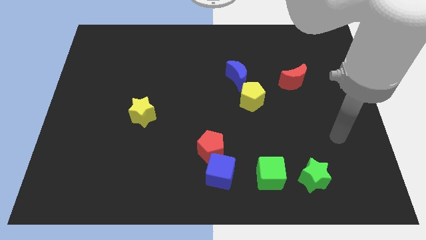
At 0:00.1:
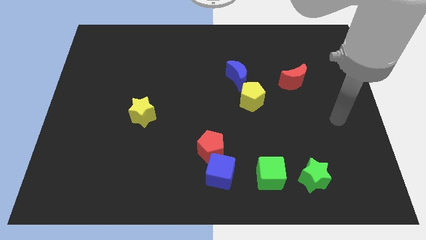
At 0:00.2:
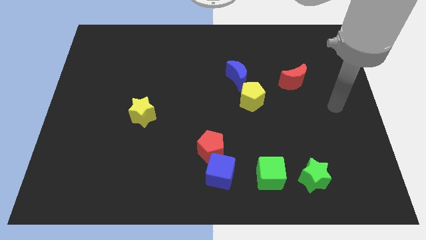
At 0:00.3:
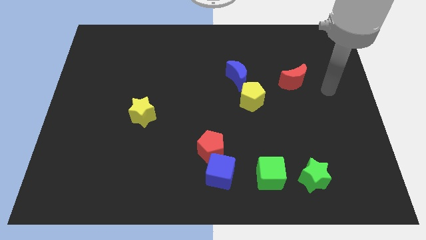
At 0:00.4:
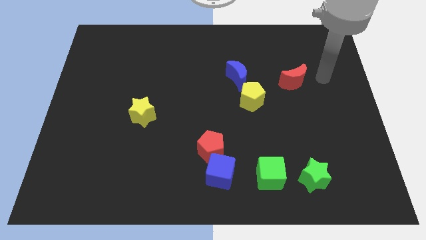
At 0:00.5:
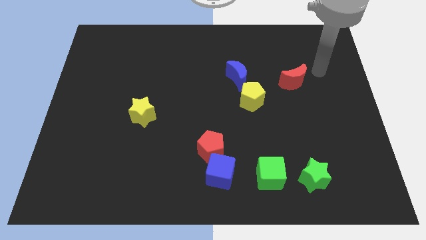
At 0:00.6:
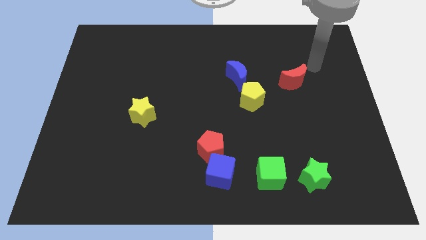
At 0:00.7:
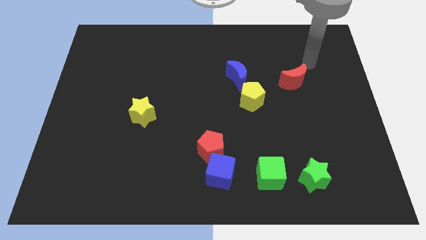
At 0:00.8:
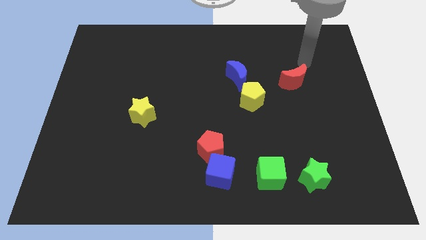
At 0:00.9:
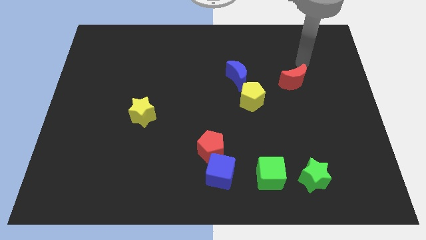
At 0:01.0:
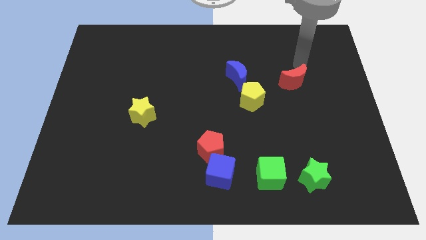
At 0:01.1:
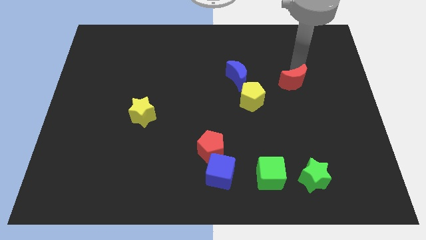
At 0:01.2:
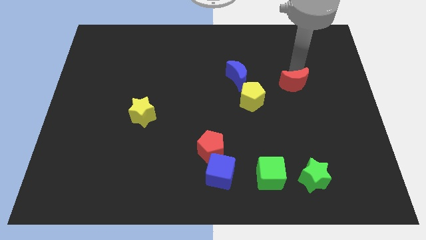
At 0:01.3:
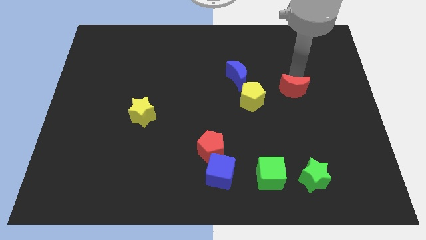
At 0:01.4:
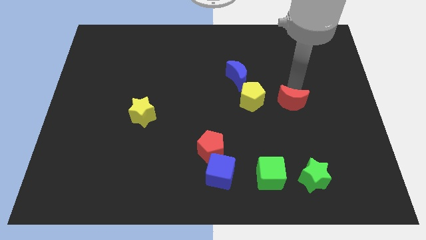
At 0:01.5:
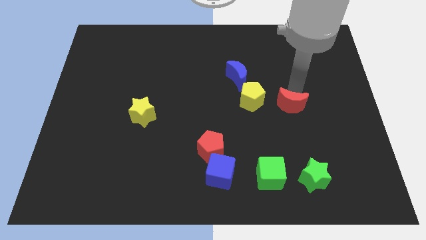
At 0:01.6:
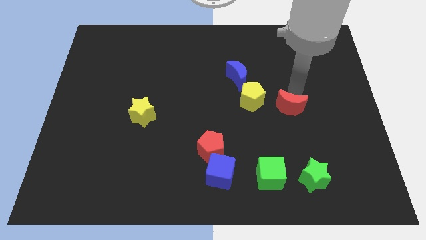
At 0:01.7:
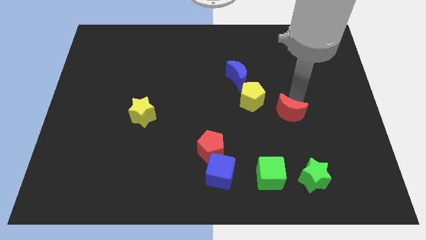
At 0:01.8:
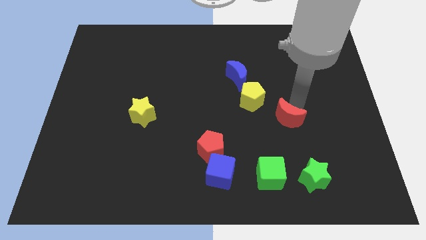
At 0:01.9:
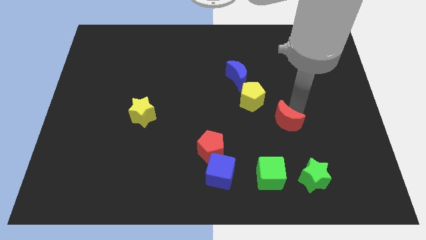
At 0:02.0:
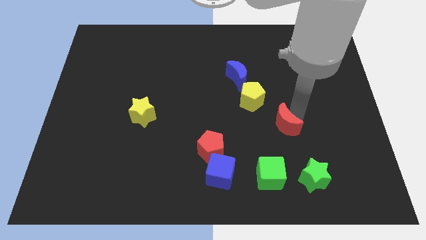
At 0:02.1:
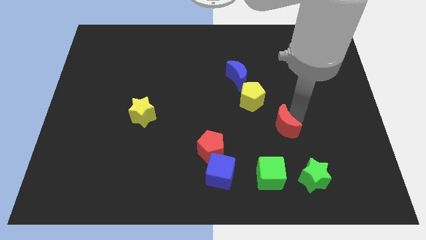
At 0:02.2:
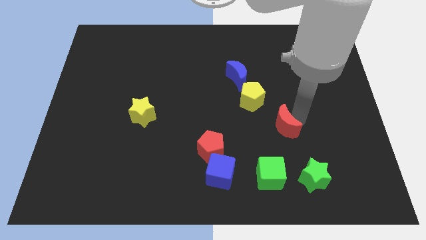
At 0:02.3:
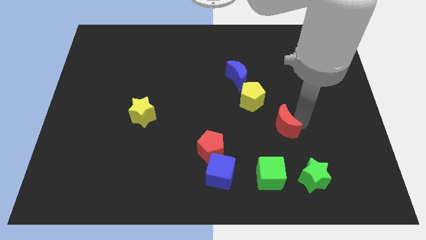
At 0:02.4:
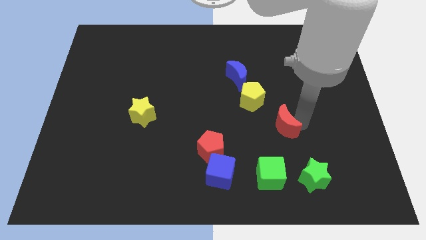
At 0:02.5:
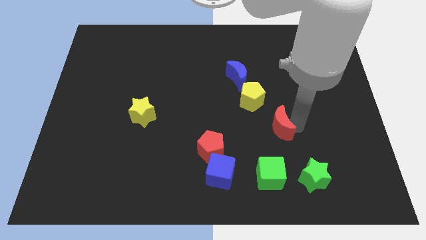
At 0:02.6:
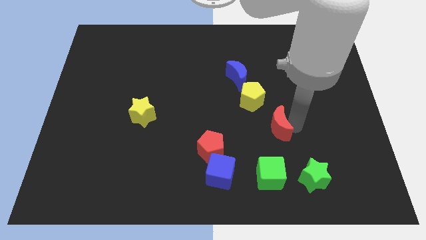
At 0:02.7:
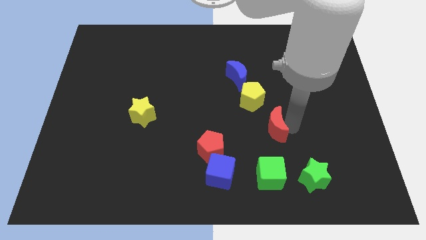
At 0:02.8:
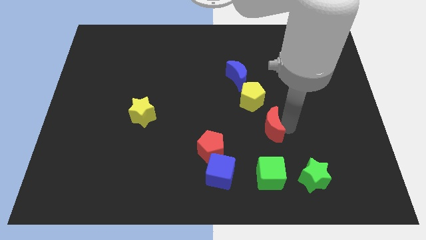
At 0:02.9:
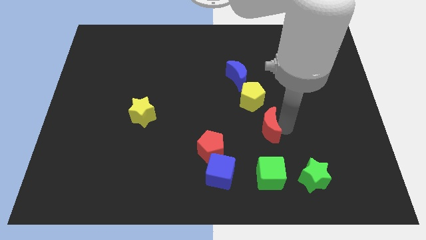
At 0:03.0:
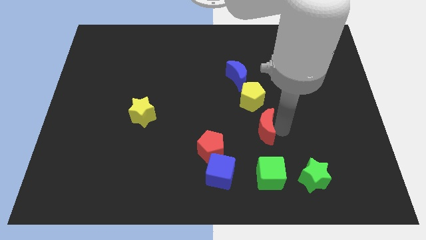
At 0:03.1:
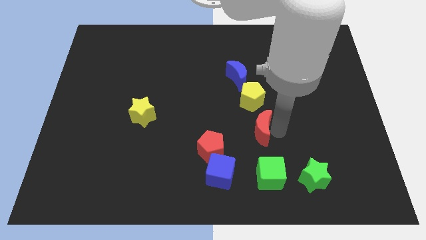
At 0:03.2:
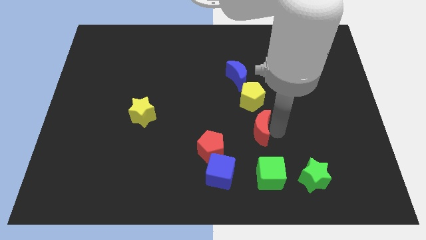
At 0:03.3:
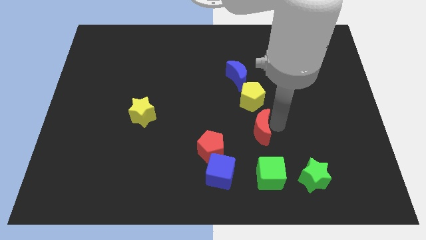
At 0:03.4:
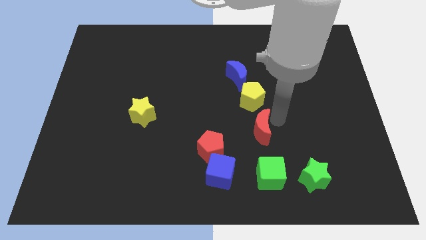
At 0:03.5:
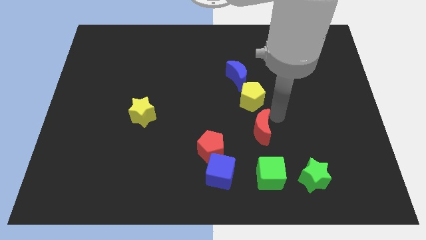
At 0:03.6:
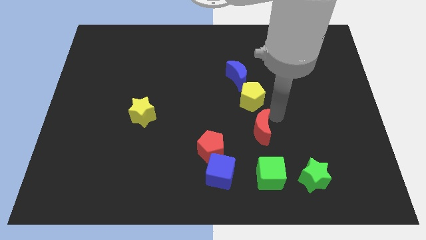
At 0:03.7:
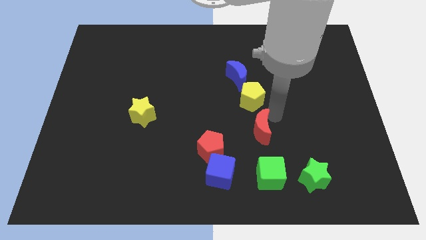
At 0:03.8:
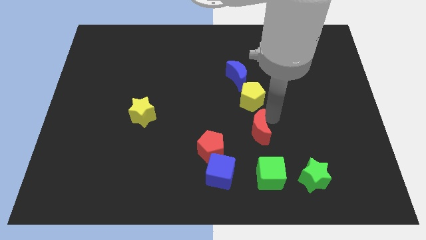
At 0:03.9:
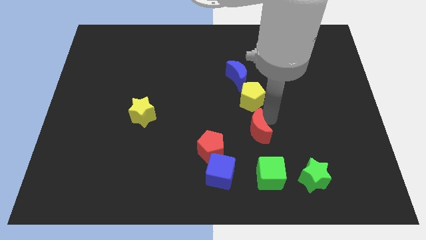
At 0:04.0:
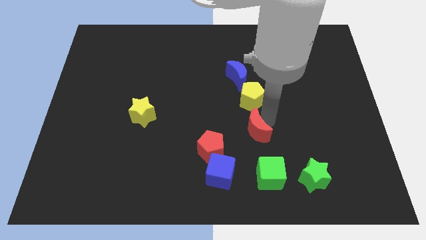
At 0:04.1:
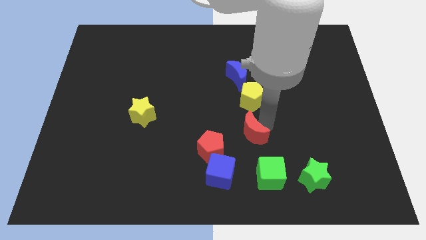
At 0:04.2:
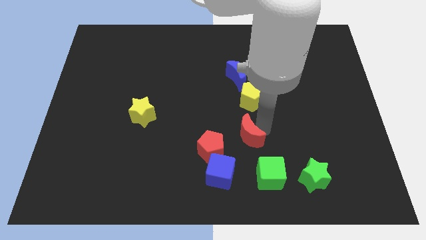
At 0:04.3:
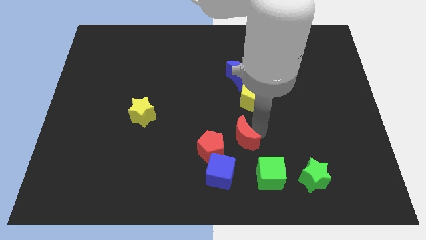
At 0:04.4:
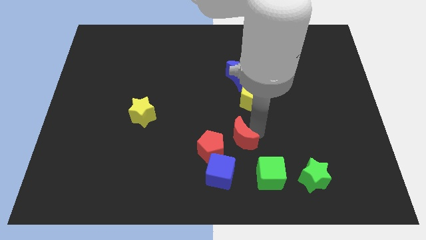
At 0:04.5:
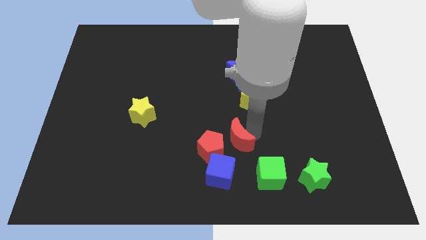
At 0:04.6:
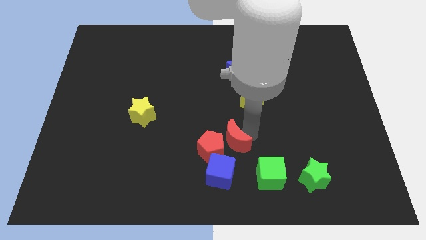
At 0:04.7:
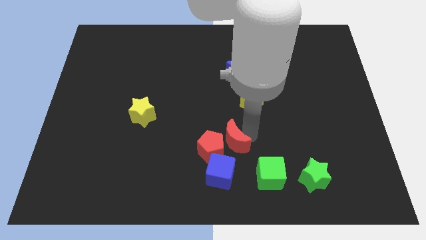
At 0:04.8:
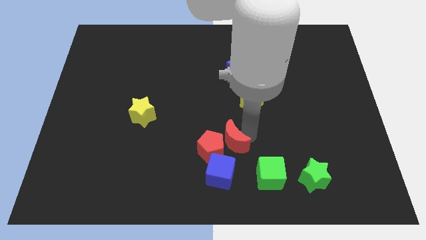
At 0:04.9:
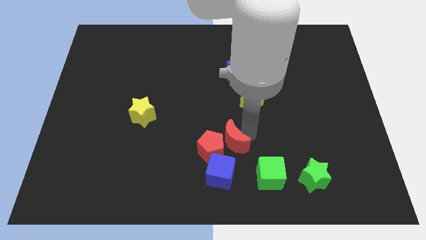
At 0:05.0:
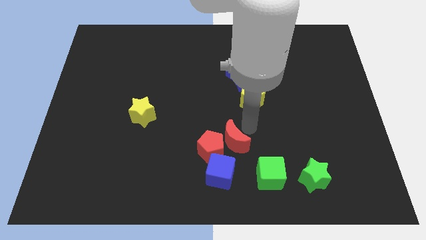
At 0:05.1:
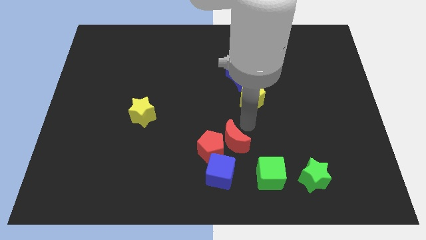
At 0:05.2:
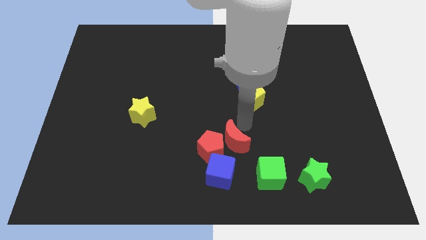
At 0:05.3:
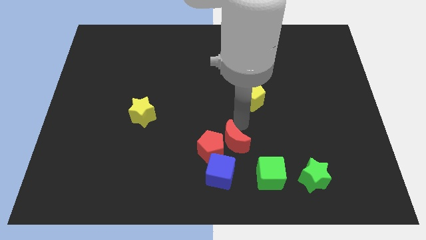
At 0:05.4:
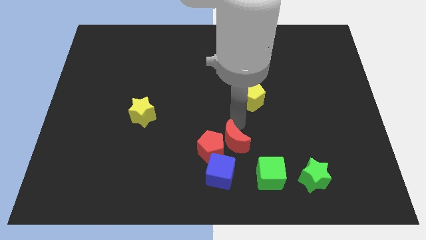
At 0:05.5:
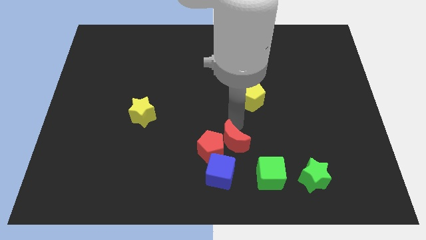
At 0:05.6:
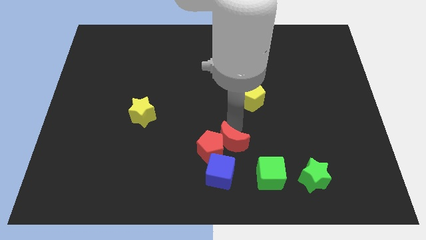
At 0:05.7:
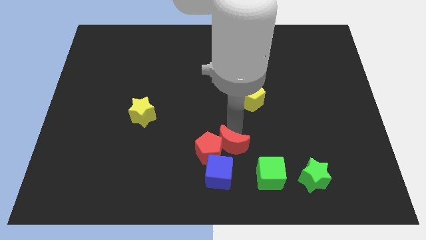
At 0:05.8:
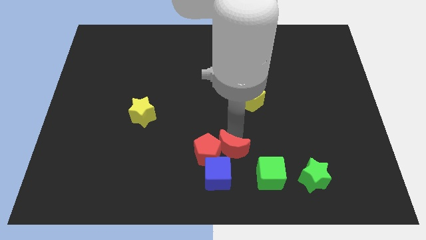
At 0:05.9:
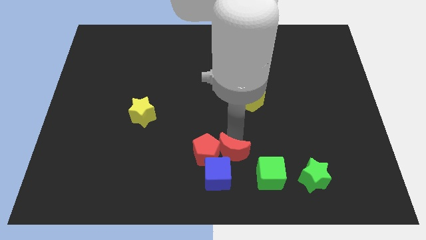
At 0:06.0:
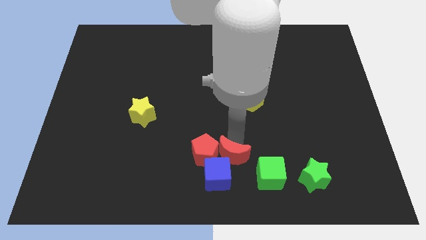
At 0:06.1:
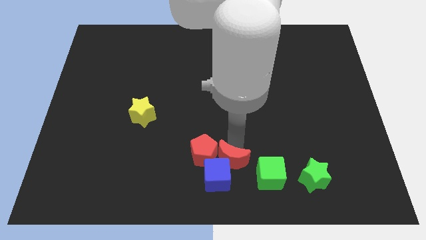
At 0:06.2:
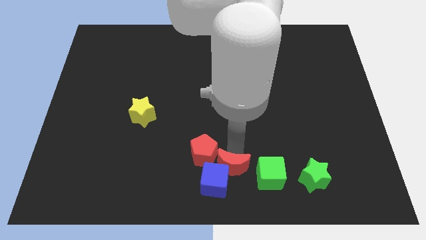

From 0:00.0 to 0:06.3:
put the red moon close to the blue cube

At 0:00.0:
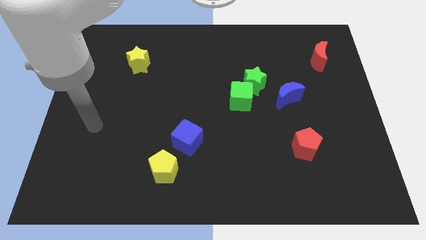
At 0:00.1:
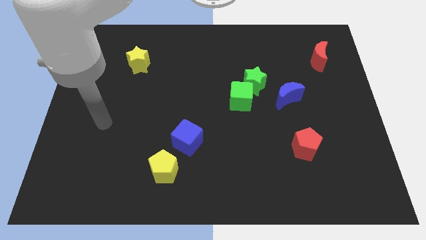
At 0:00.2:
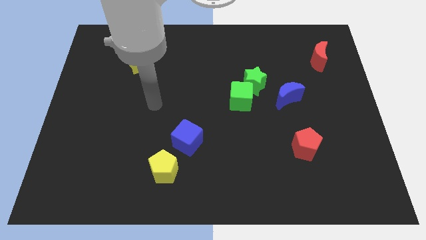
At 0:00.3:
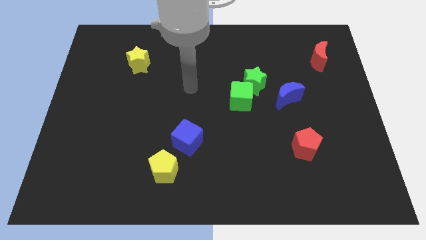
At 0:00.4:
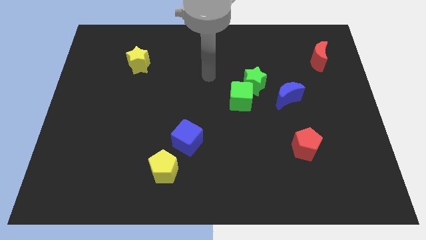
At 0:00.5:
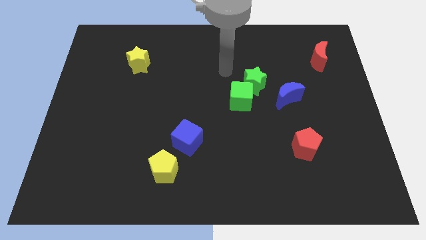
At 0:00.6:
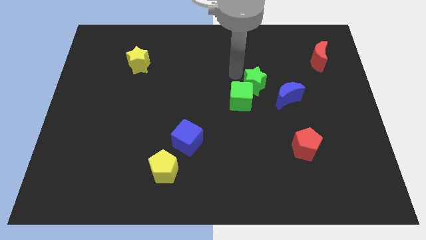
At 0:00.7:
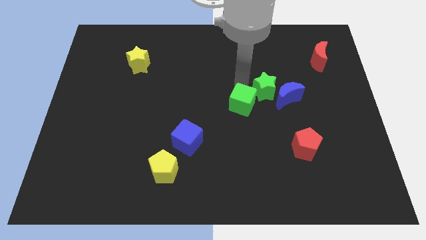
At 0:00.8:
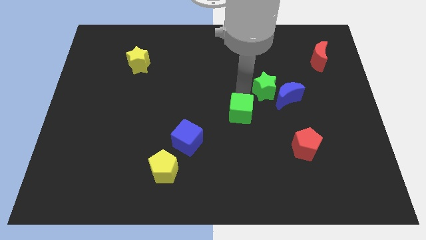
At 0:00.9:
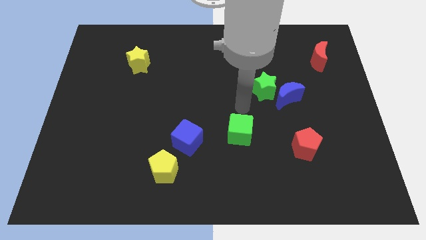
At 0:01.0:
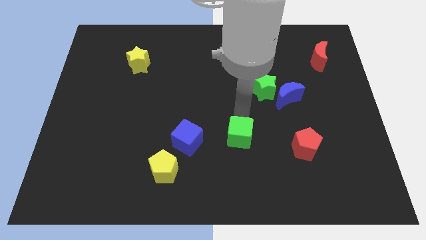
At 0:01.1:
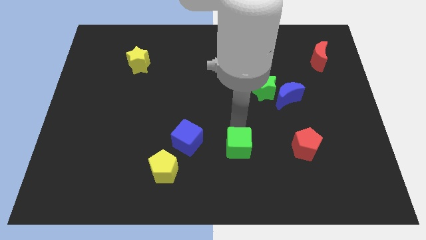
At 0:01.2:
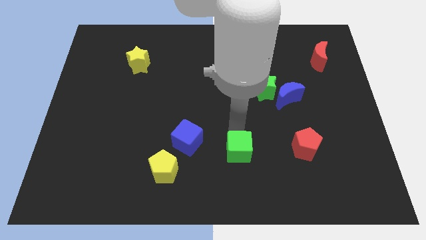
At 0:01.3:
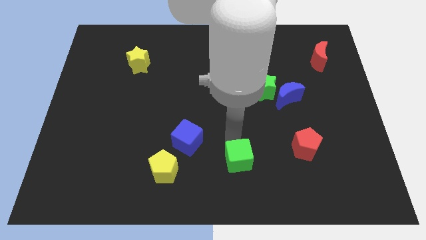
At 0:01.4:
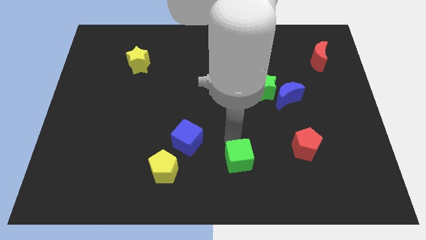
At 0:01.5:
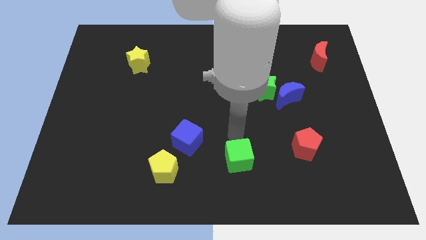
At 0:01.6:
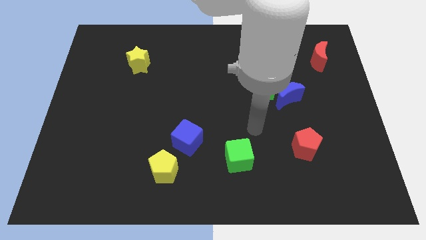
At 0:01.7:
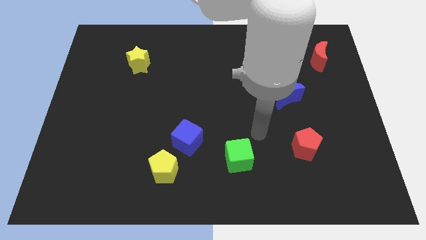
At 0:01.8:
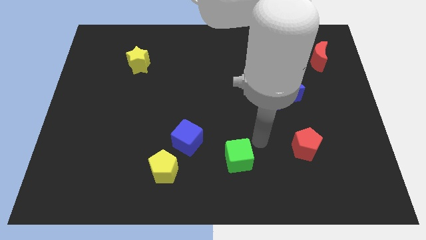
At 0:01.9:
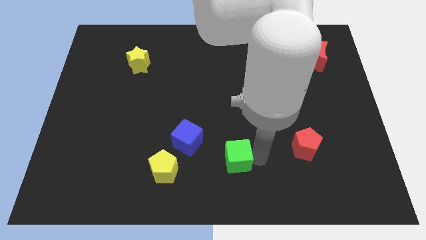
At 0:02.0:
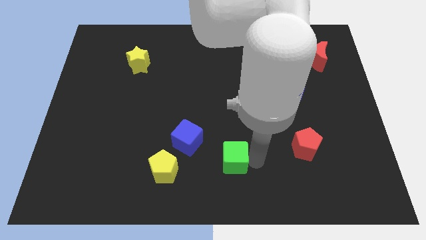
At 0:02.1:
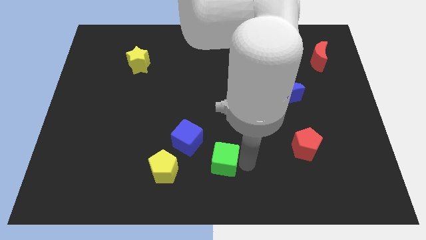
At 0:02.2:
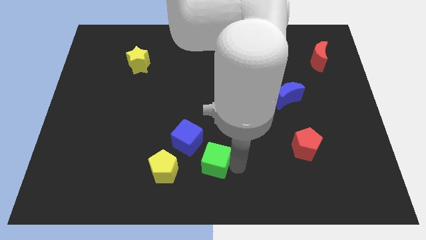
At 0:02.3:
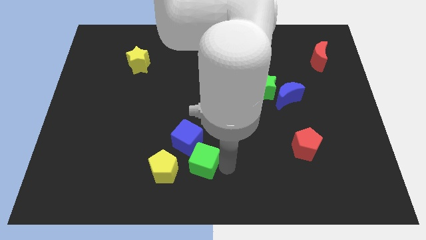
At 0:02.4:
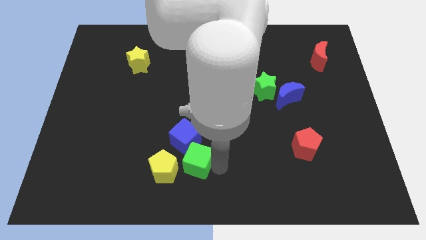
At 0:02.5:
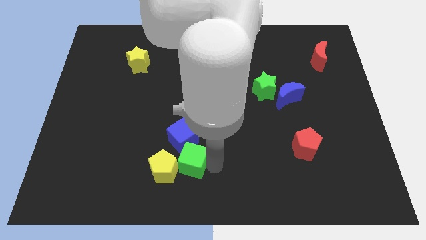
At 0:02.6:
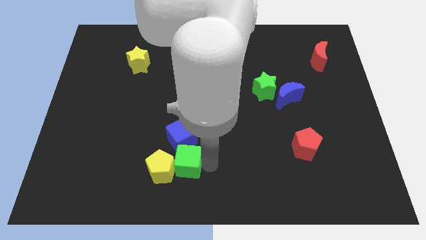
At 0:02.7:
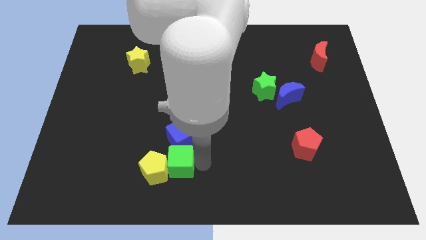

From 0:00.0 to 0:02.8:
put the green cube towards the yellow pentagon
